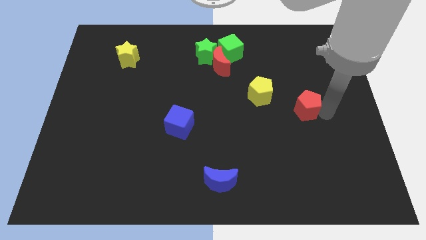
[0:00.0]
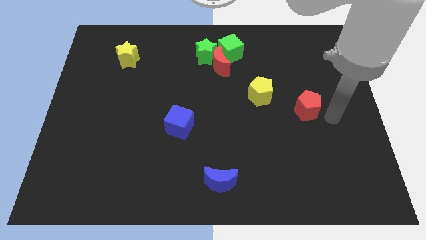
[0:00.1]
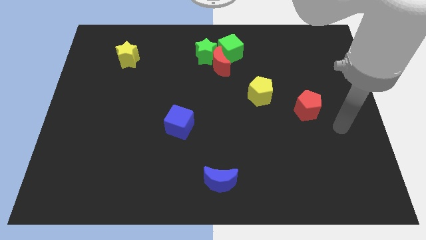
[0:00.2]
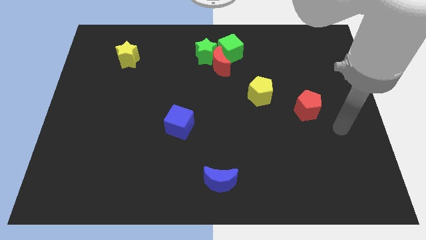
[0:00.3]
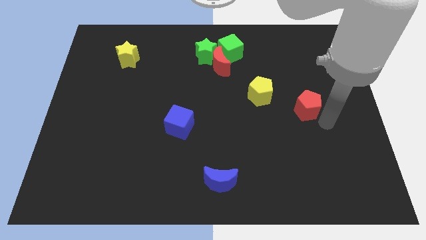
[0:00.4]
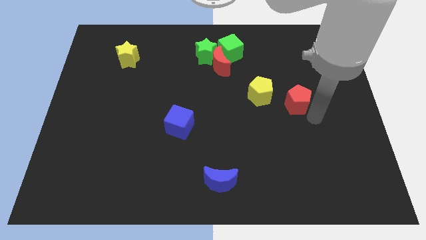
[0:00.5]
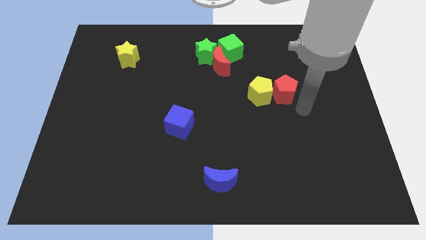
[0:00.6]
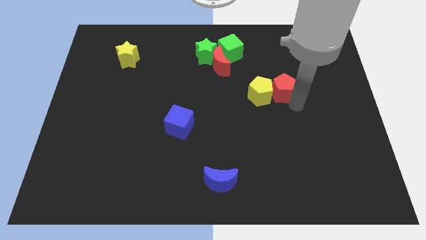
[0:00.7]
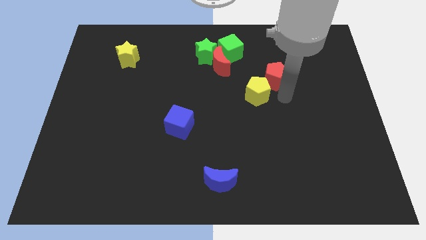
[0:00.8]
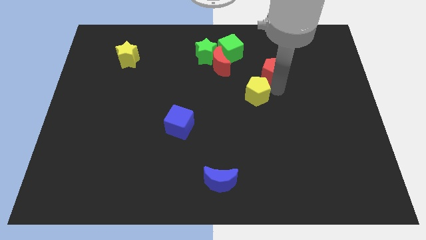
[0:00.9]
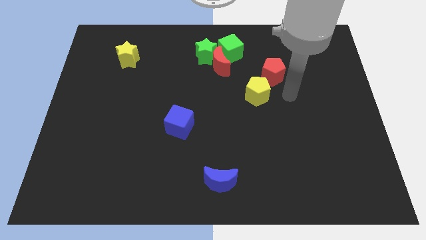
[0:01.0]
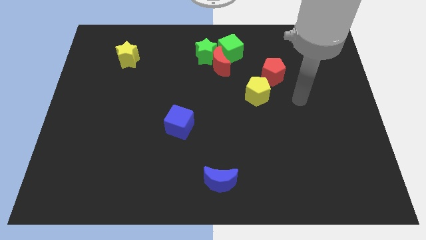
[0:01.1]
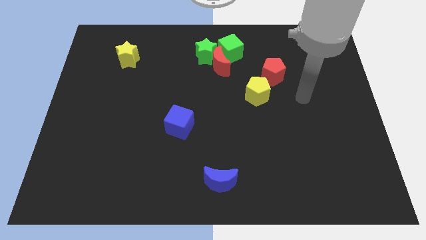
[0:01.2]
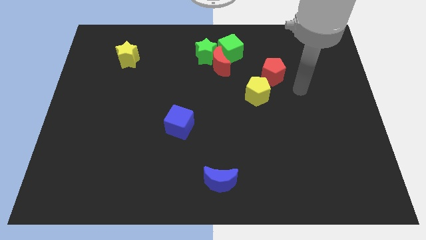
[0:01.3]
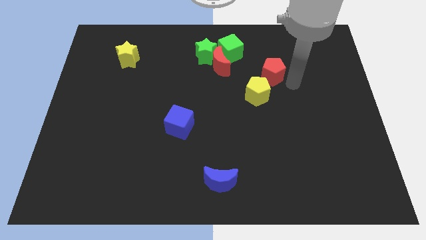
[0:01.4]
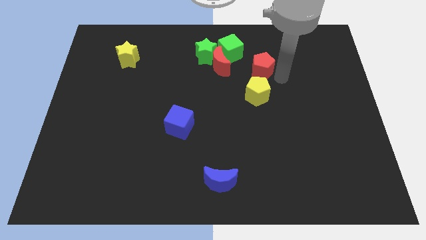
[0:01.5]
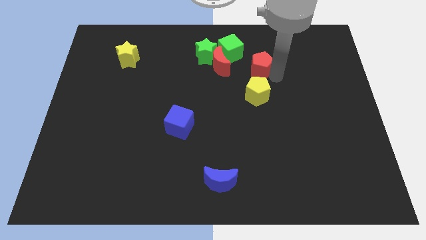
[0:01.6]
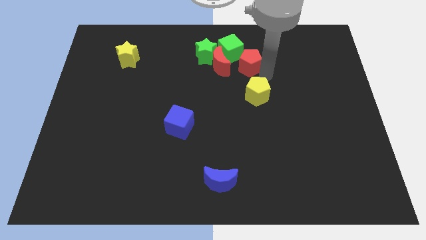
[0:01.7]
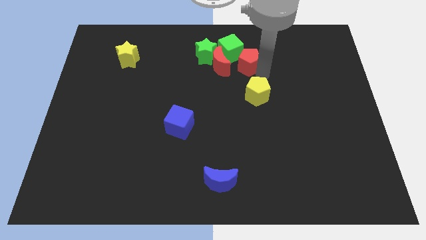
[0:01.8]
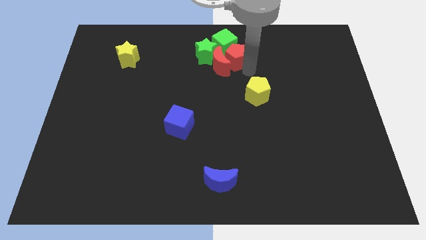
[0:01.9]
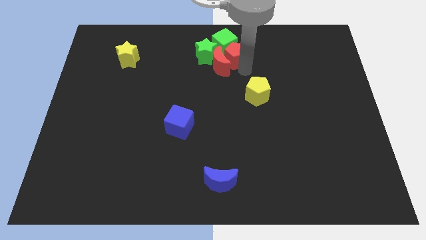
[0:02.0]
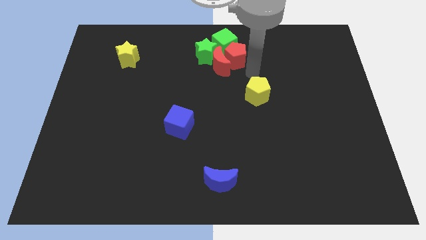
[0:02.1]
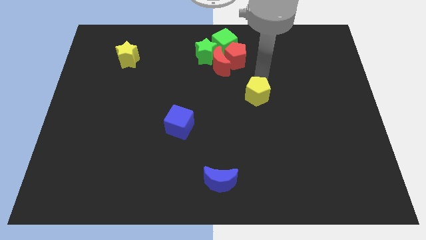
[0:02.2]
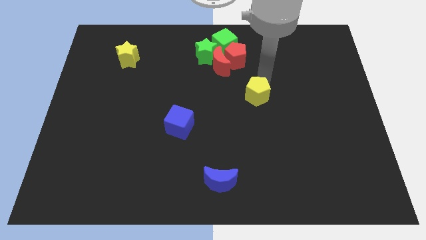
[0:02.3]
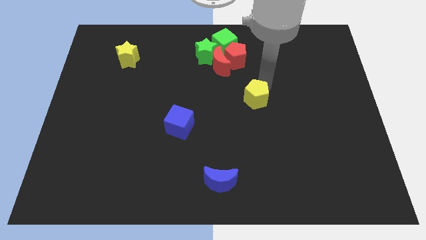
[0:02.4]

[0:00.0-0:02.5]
move the red pentagon to the bottom of the green cube

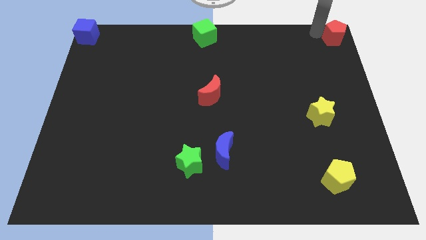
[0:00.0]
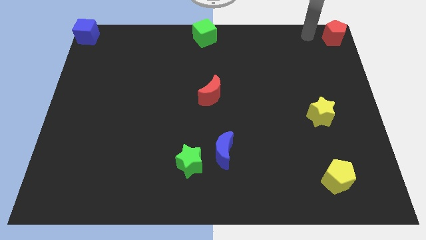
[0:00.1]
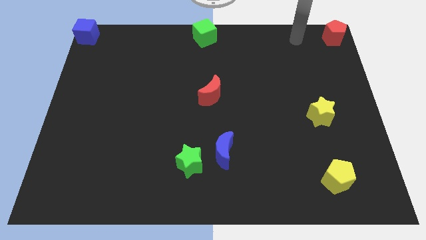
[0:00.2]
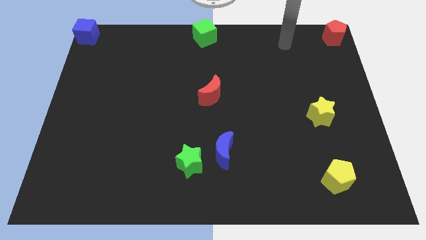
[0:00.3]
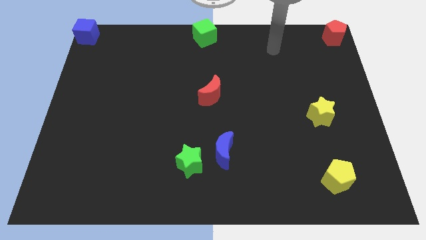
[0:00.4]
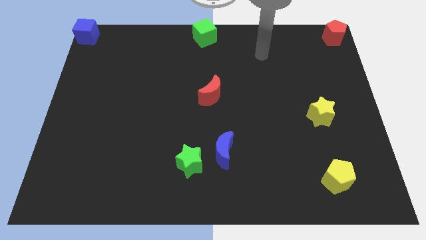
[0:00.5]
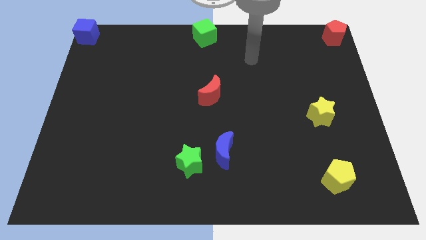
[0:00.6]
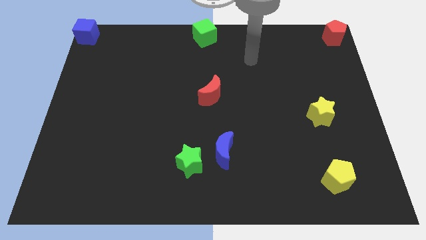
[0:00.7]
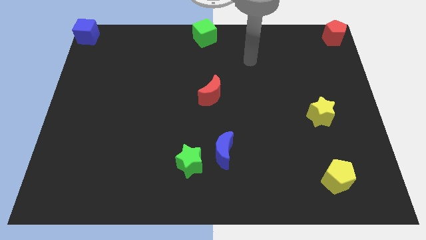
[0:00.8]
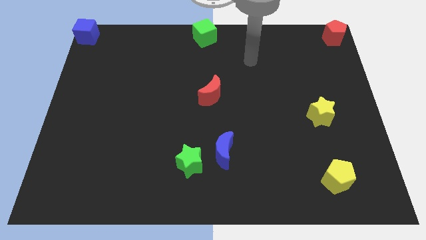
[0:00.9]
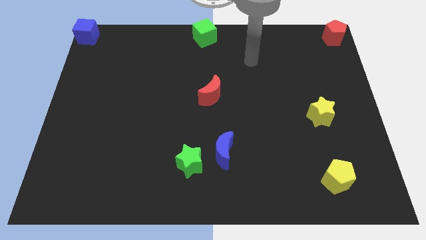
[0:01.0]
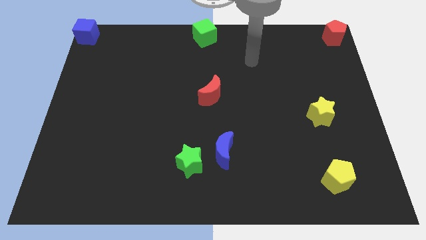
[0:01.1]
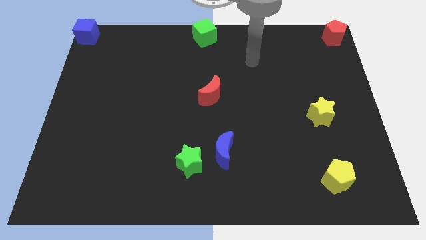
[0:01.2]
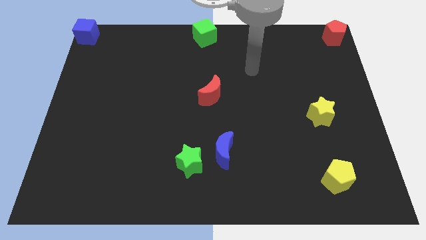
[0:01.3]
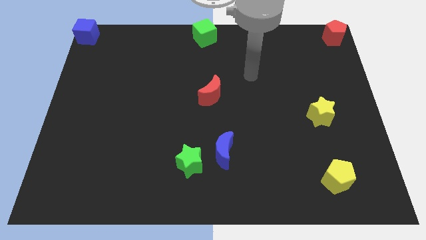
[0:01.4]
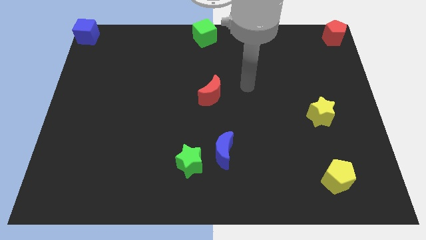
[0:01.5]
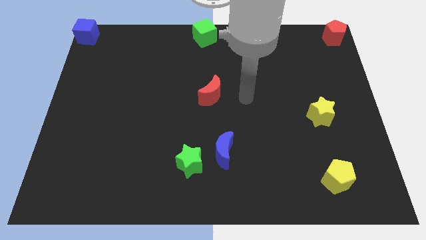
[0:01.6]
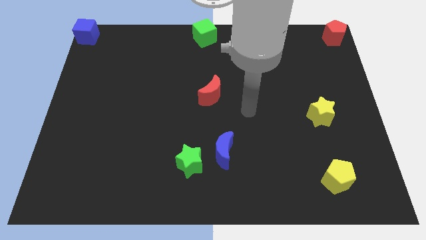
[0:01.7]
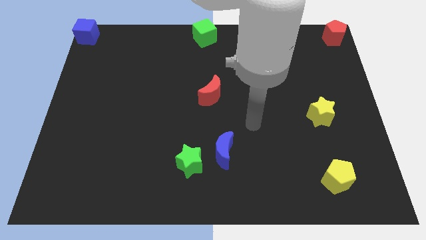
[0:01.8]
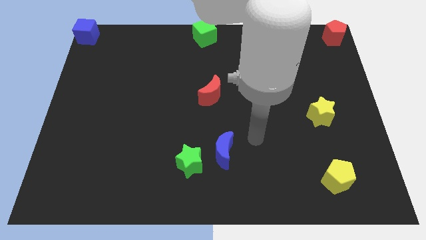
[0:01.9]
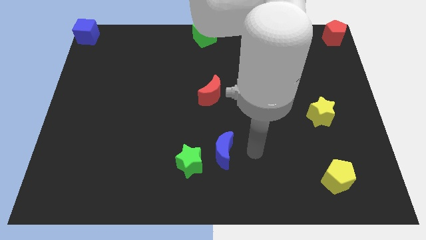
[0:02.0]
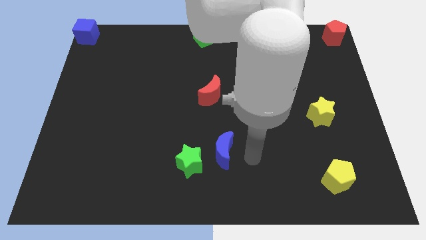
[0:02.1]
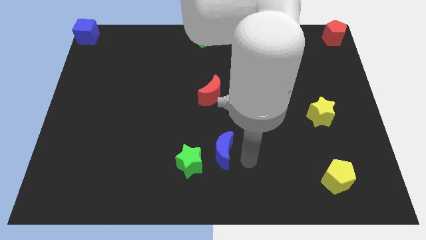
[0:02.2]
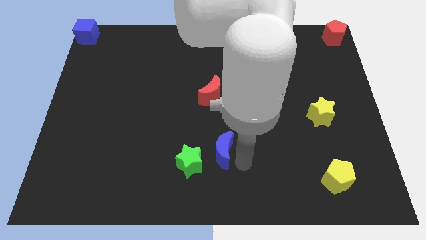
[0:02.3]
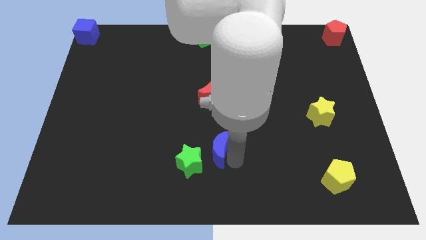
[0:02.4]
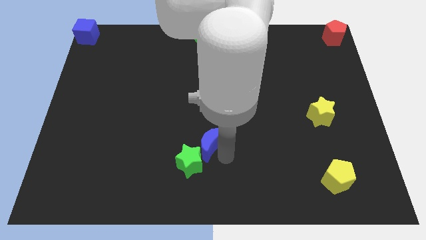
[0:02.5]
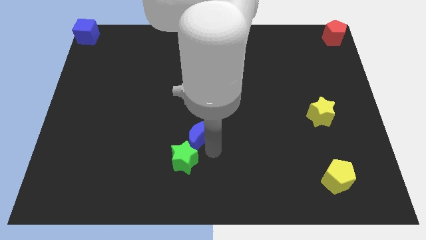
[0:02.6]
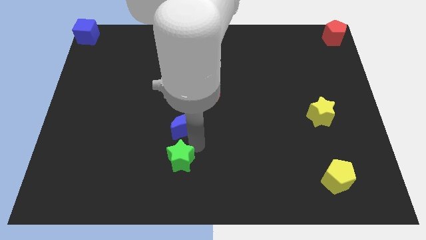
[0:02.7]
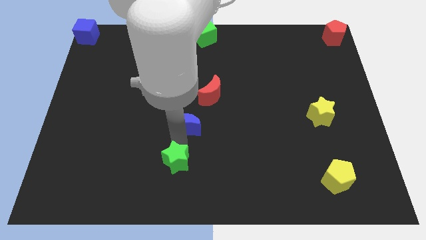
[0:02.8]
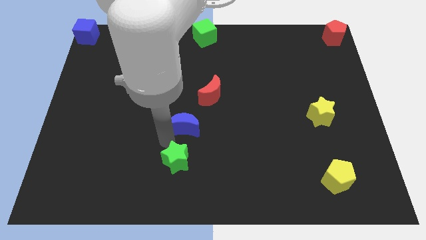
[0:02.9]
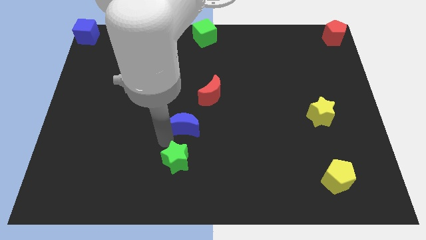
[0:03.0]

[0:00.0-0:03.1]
move the blue crescent to the top of the green star

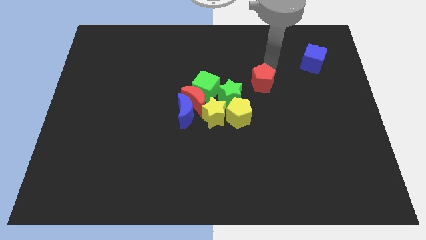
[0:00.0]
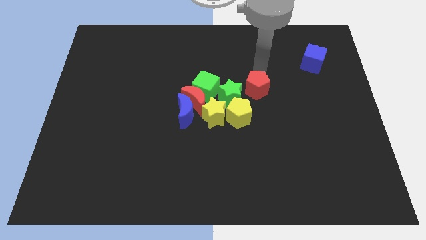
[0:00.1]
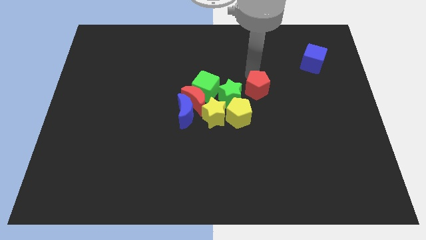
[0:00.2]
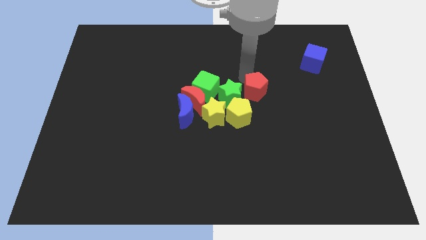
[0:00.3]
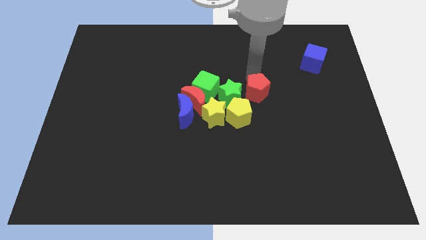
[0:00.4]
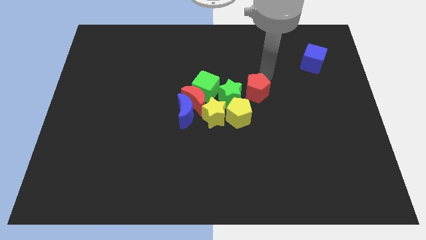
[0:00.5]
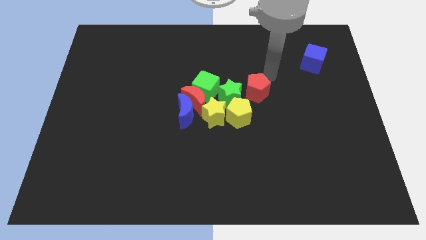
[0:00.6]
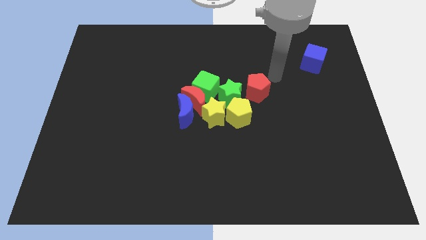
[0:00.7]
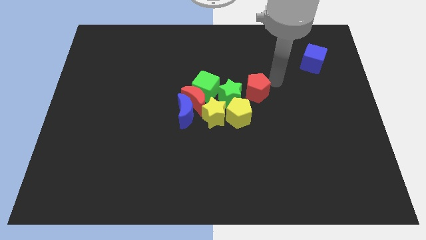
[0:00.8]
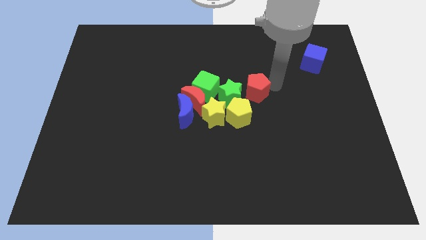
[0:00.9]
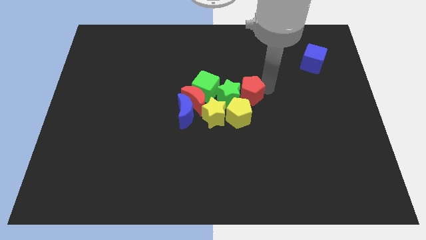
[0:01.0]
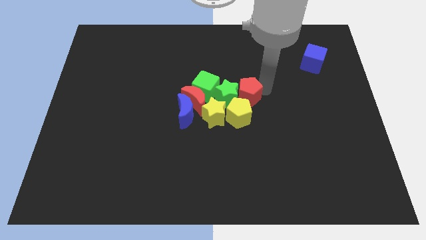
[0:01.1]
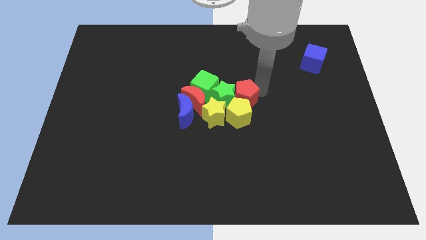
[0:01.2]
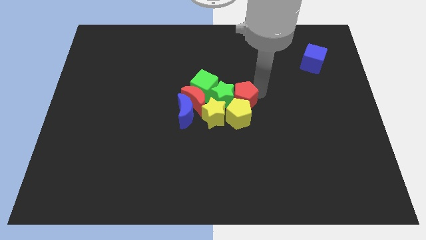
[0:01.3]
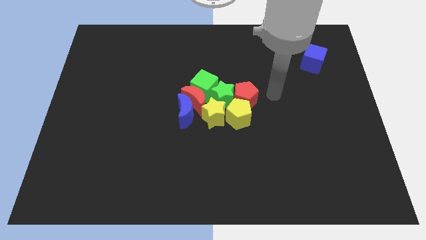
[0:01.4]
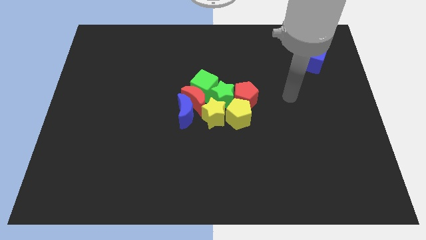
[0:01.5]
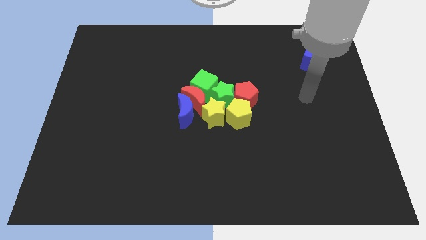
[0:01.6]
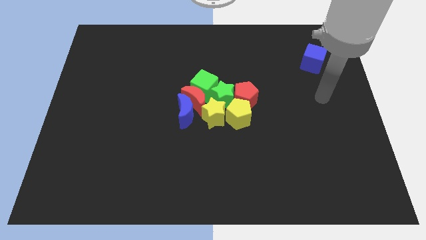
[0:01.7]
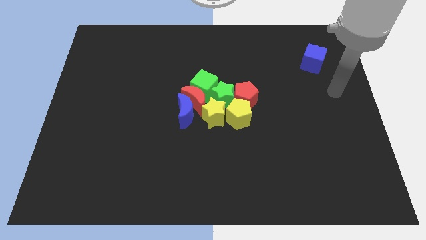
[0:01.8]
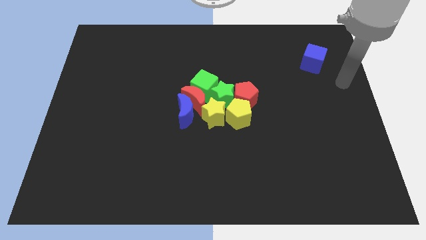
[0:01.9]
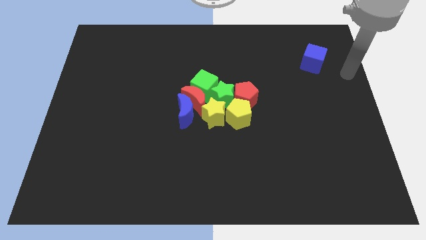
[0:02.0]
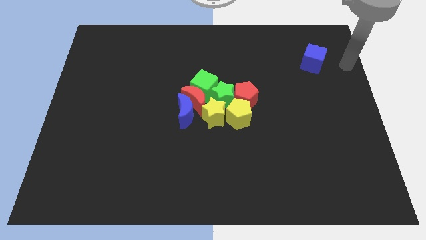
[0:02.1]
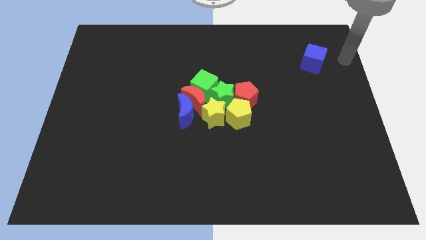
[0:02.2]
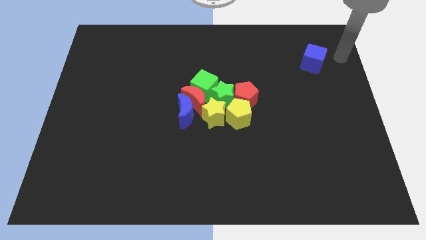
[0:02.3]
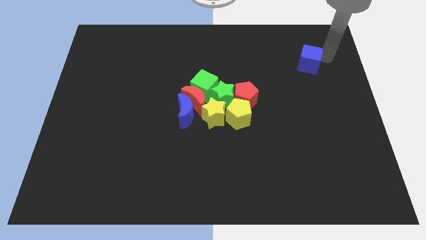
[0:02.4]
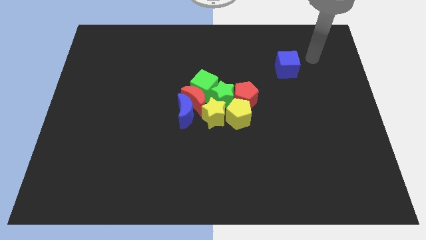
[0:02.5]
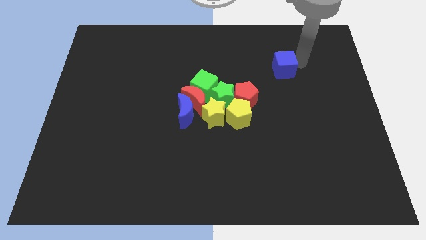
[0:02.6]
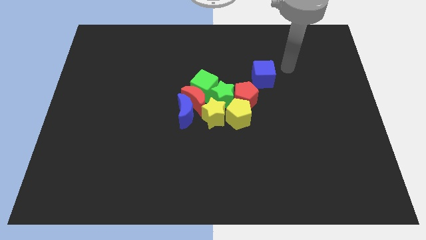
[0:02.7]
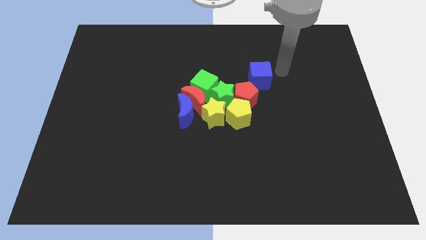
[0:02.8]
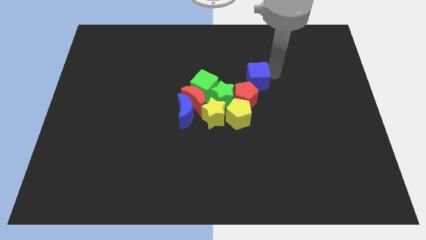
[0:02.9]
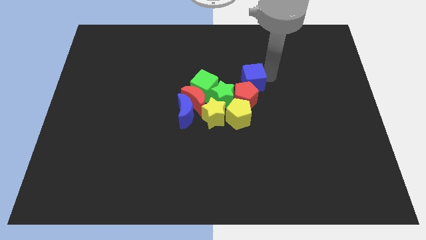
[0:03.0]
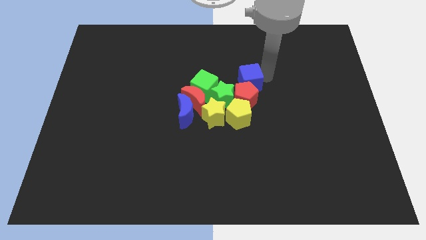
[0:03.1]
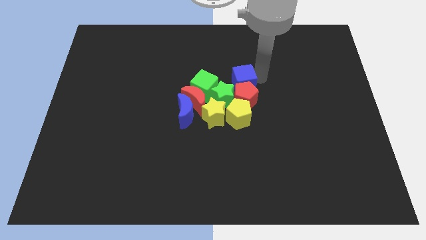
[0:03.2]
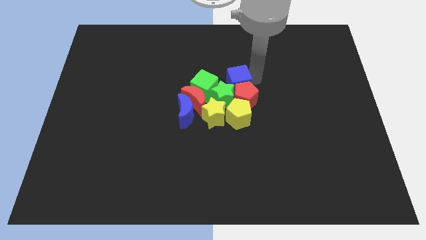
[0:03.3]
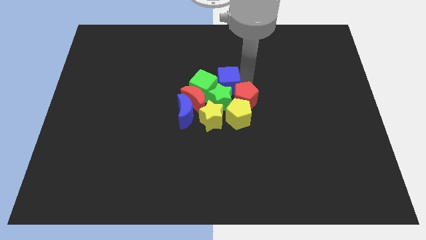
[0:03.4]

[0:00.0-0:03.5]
move the blue cube and red pentagon into the group of blocks
